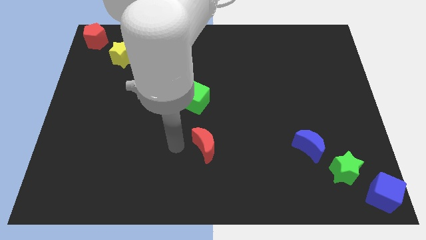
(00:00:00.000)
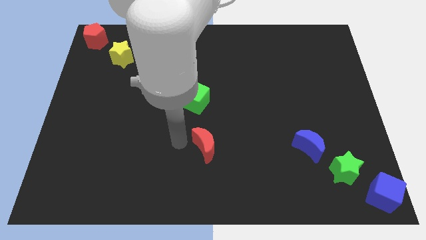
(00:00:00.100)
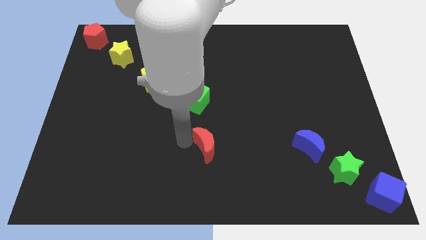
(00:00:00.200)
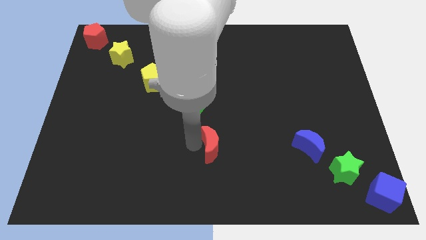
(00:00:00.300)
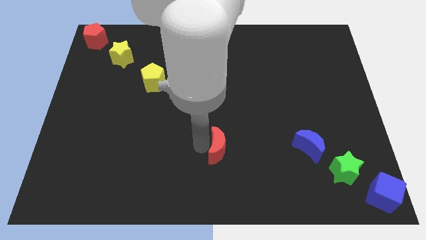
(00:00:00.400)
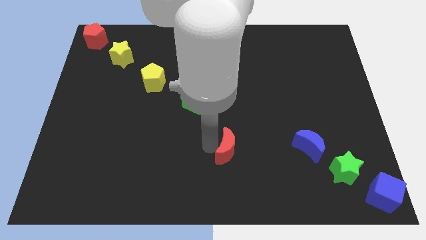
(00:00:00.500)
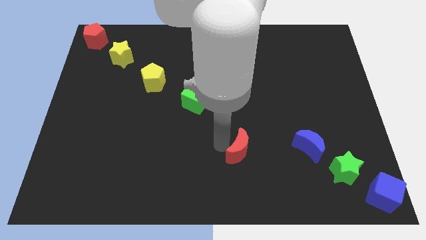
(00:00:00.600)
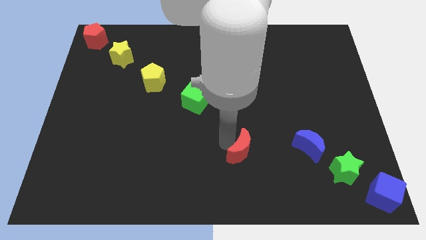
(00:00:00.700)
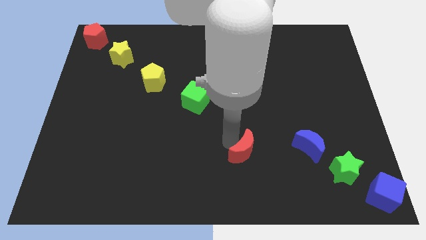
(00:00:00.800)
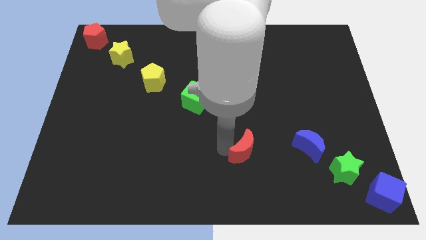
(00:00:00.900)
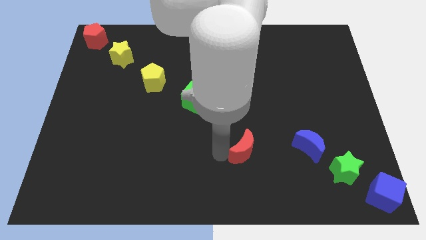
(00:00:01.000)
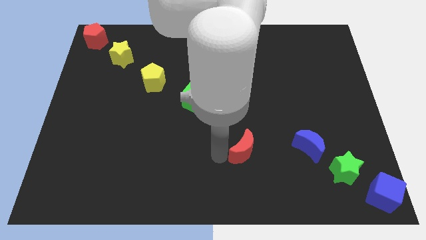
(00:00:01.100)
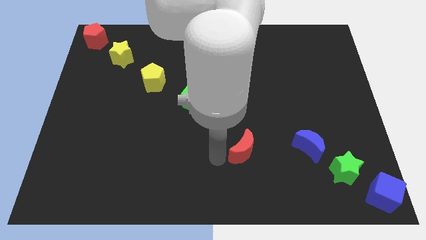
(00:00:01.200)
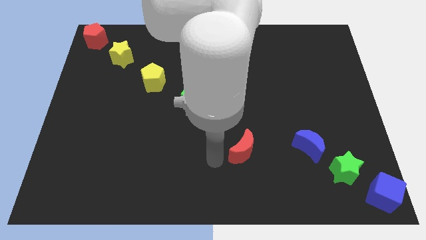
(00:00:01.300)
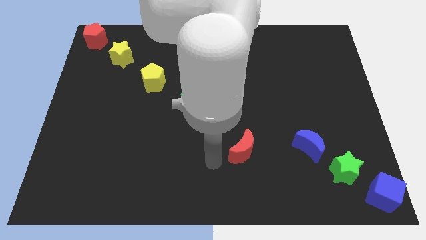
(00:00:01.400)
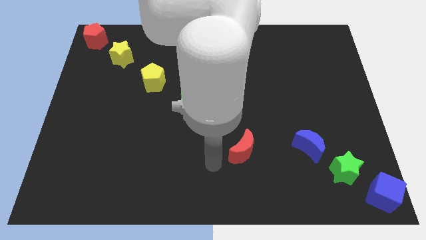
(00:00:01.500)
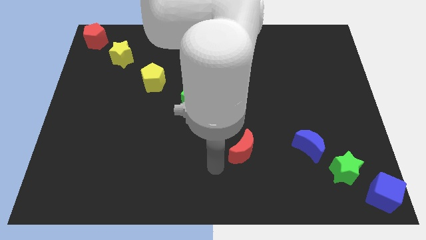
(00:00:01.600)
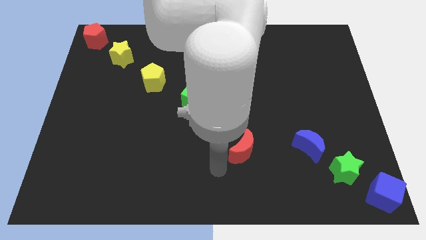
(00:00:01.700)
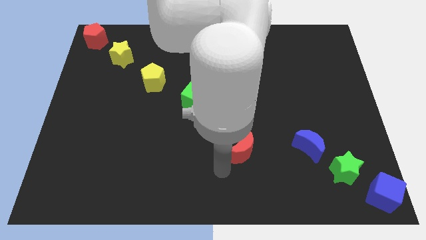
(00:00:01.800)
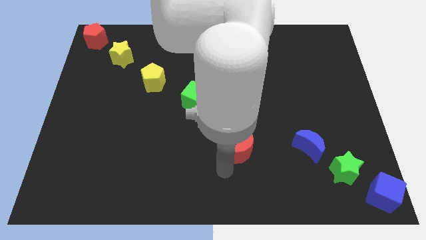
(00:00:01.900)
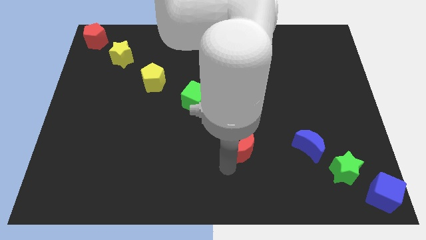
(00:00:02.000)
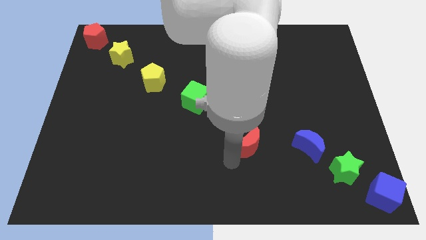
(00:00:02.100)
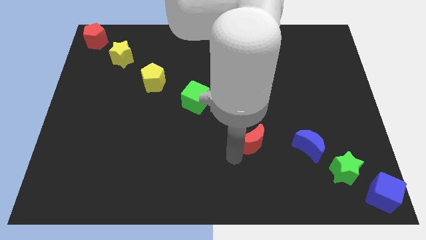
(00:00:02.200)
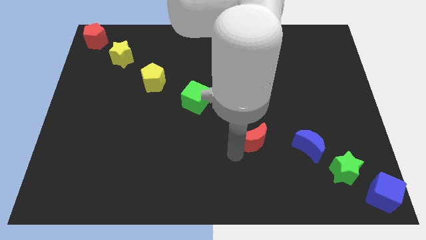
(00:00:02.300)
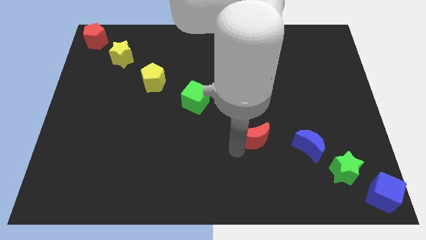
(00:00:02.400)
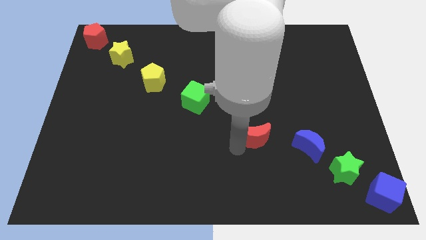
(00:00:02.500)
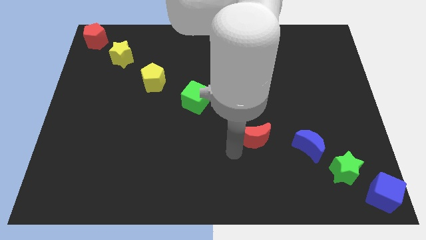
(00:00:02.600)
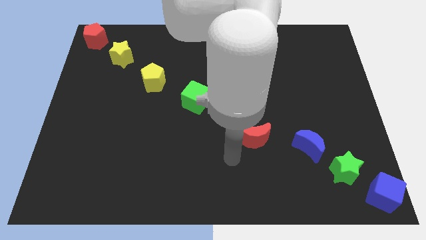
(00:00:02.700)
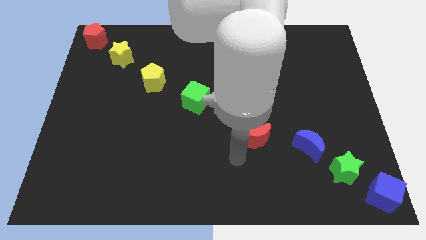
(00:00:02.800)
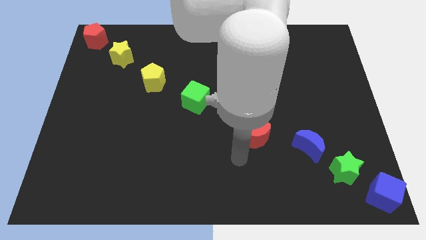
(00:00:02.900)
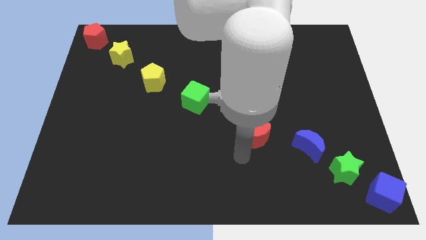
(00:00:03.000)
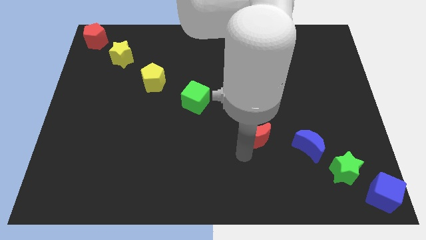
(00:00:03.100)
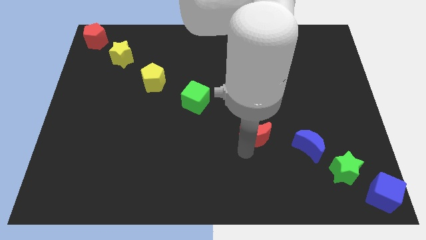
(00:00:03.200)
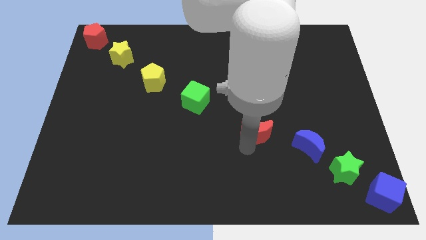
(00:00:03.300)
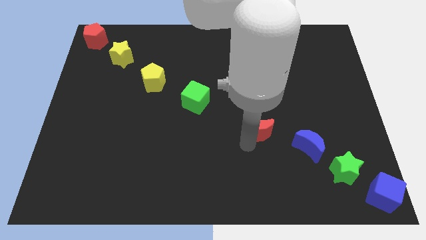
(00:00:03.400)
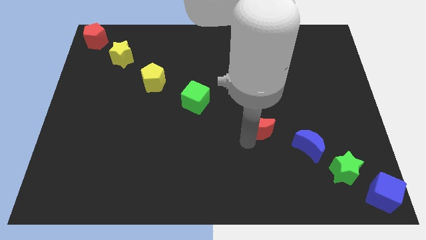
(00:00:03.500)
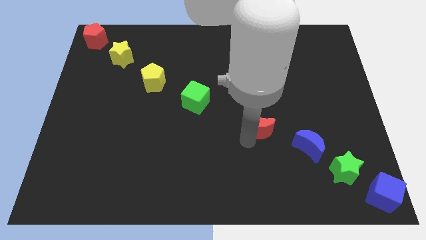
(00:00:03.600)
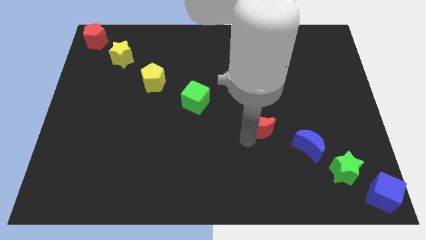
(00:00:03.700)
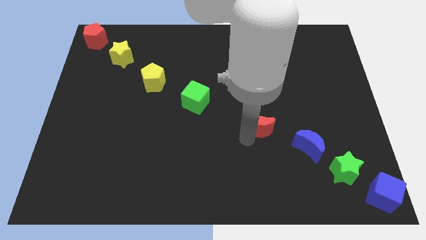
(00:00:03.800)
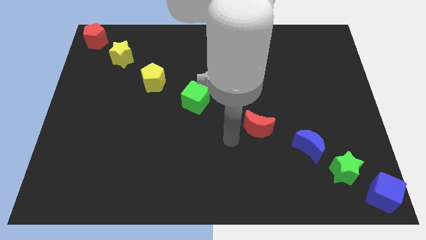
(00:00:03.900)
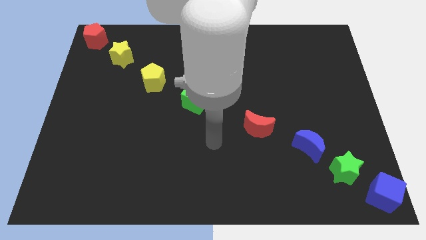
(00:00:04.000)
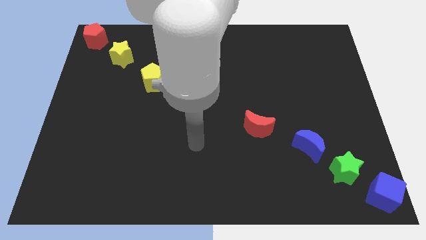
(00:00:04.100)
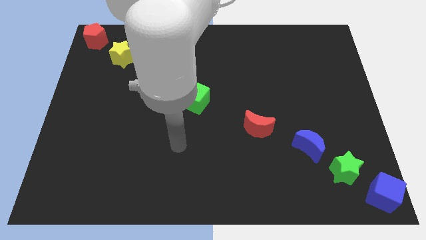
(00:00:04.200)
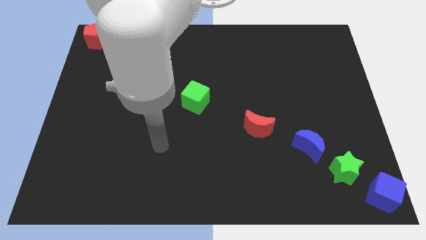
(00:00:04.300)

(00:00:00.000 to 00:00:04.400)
move red moon diagonally in between the blue crescent and green cube

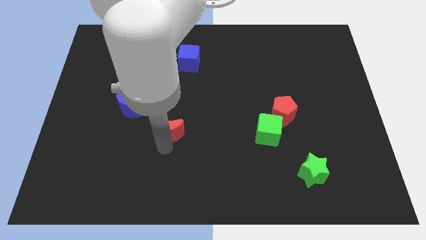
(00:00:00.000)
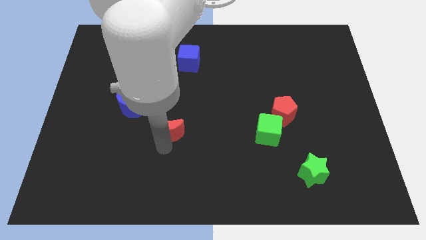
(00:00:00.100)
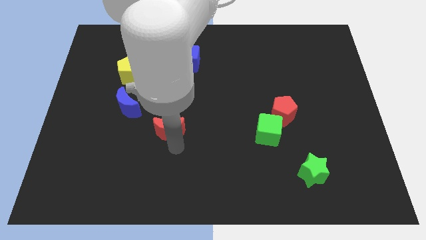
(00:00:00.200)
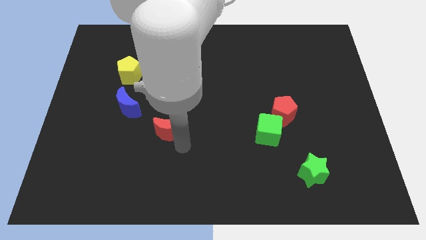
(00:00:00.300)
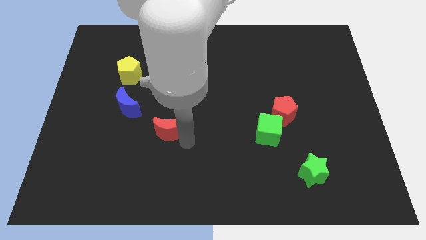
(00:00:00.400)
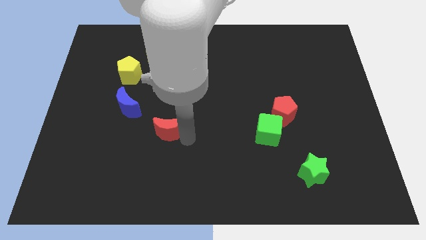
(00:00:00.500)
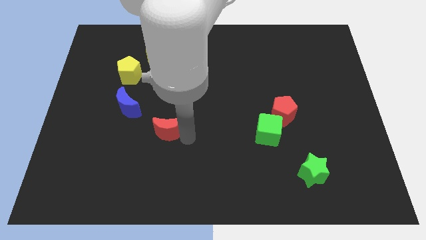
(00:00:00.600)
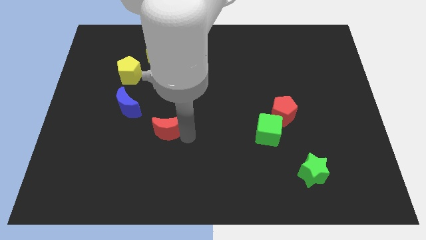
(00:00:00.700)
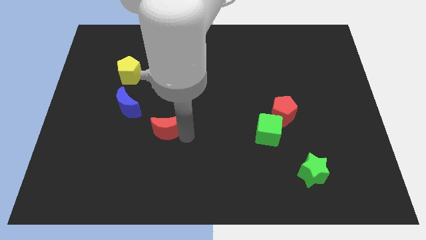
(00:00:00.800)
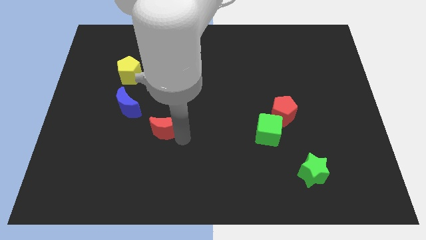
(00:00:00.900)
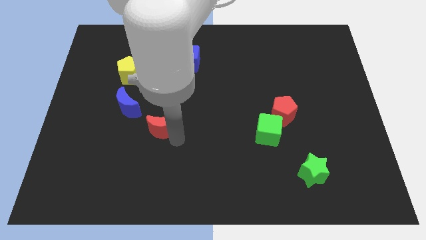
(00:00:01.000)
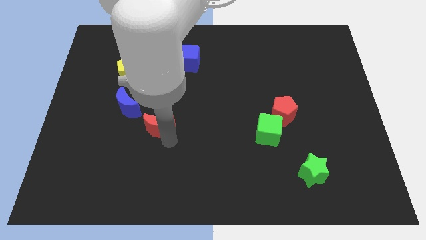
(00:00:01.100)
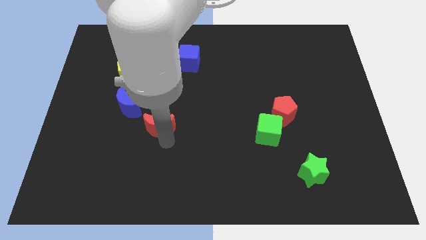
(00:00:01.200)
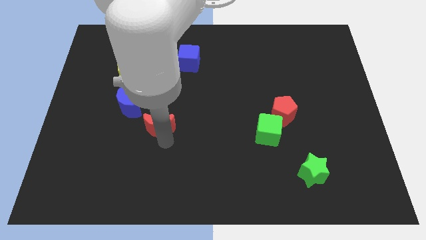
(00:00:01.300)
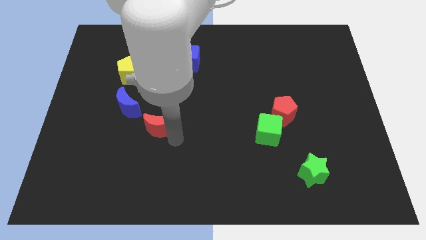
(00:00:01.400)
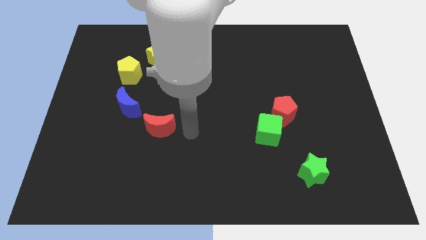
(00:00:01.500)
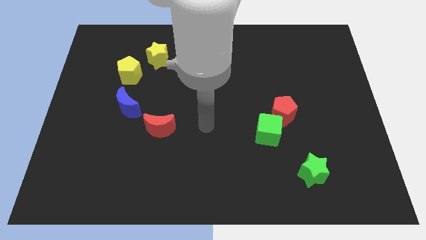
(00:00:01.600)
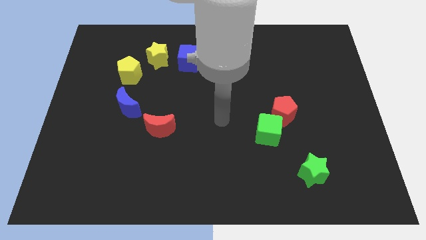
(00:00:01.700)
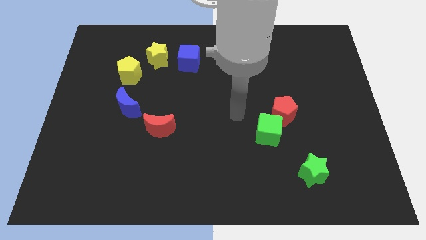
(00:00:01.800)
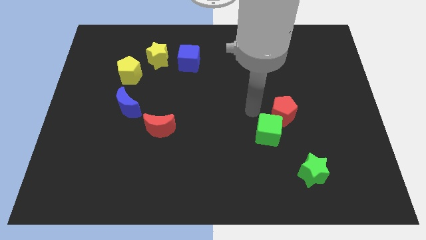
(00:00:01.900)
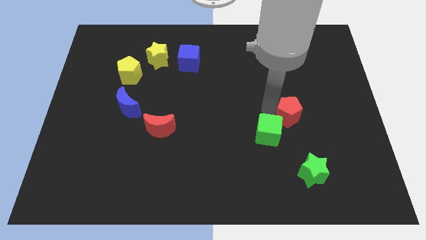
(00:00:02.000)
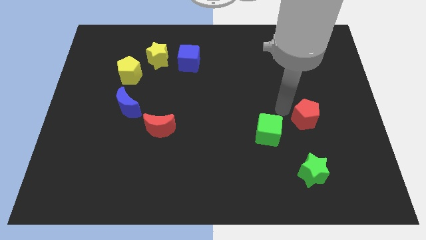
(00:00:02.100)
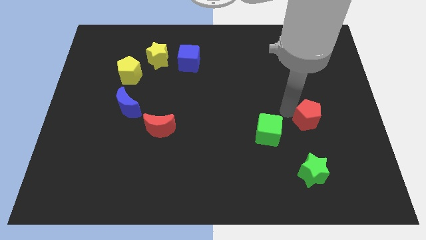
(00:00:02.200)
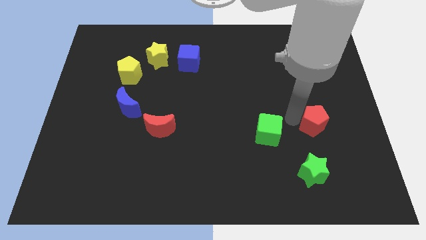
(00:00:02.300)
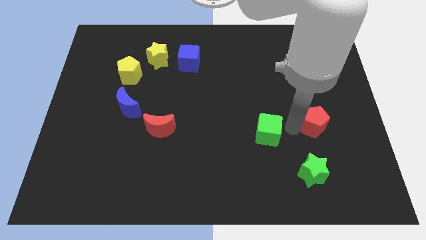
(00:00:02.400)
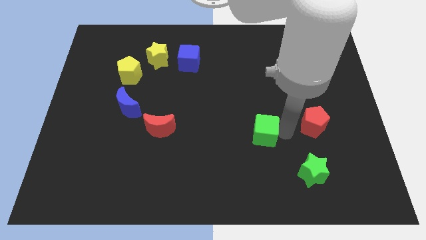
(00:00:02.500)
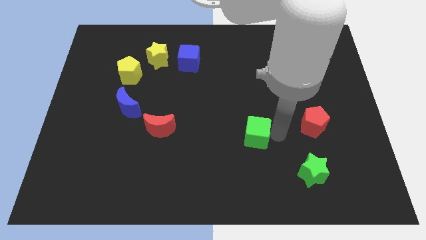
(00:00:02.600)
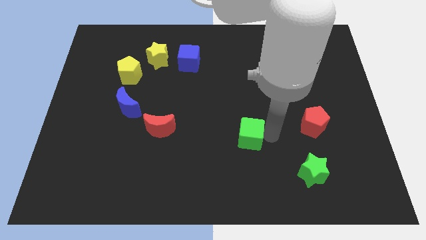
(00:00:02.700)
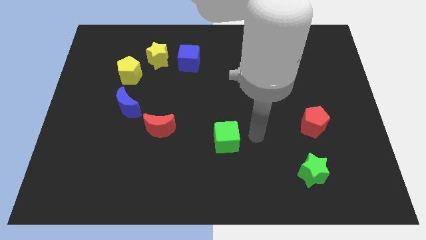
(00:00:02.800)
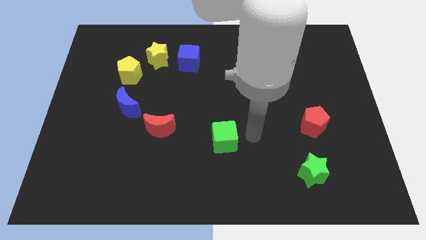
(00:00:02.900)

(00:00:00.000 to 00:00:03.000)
slightly push the red pentagon to the right

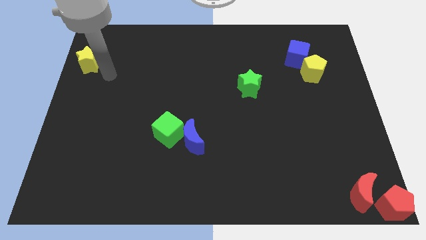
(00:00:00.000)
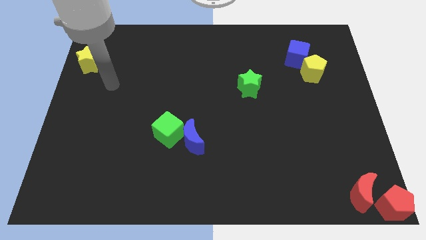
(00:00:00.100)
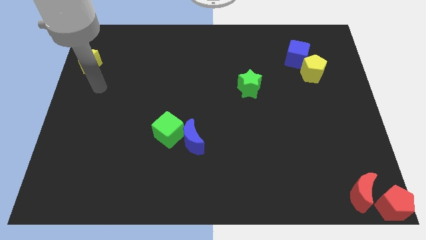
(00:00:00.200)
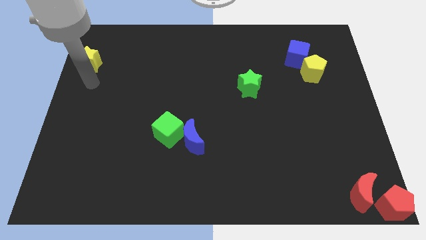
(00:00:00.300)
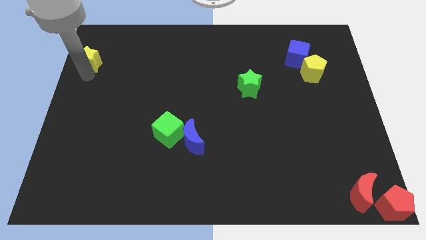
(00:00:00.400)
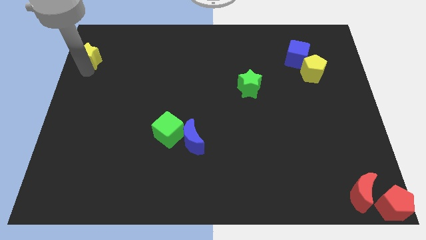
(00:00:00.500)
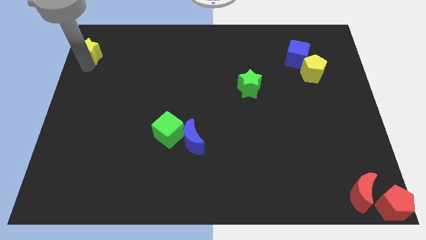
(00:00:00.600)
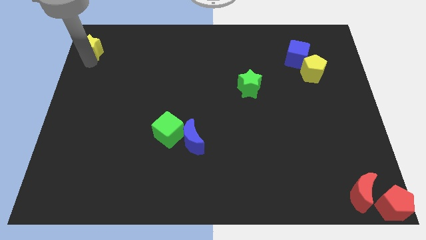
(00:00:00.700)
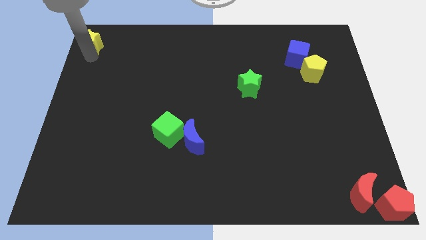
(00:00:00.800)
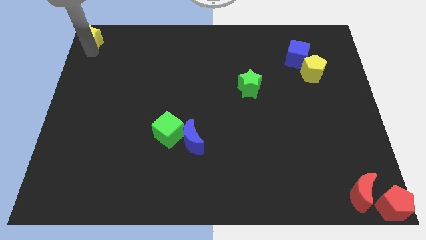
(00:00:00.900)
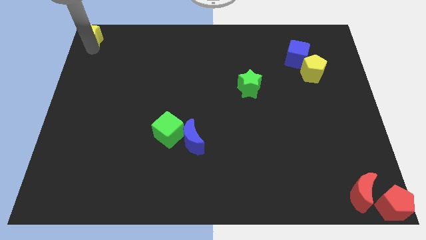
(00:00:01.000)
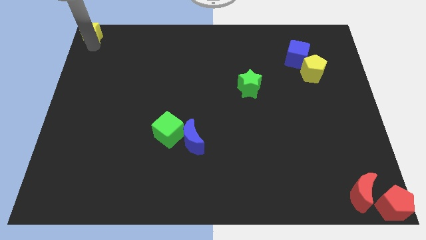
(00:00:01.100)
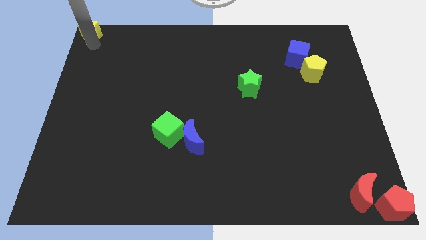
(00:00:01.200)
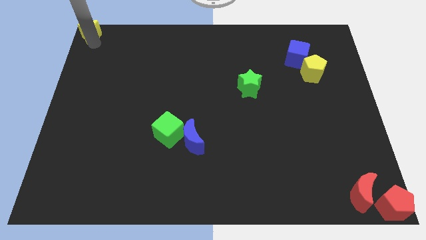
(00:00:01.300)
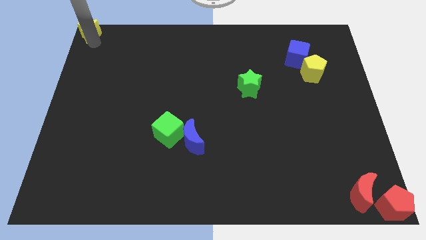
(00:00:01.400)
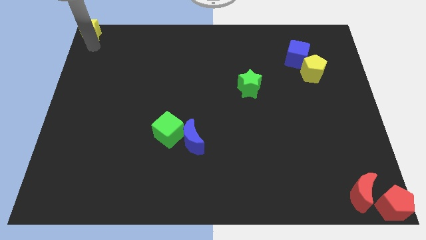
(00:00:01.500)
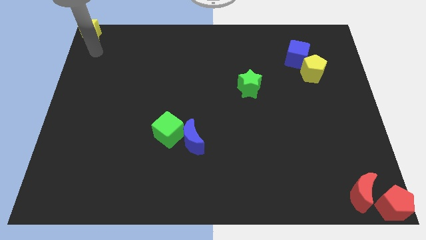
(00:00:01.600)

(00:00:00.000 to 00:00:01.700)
push the yellow star at the top left corner
